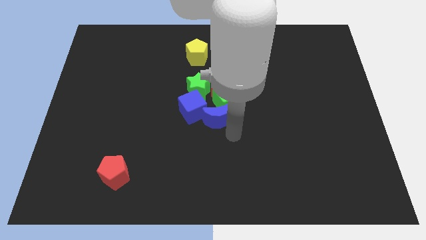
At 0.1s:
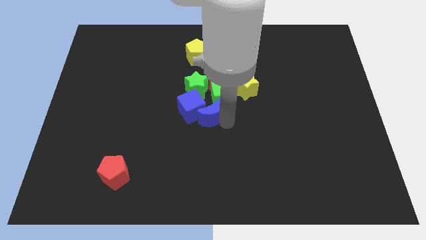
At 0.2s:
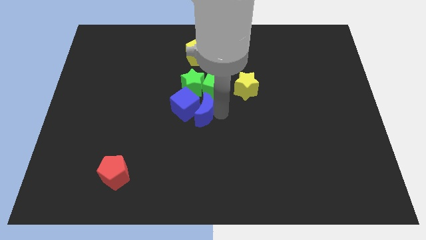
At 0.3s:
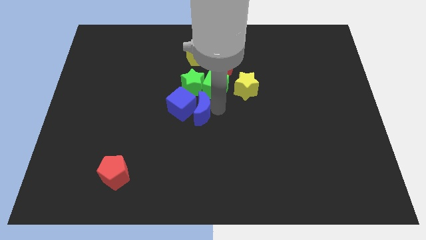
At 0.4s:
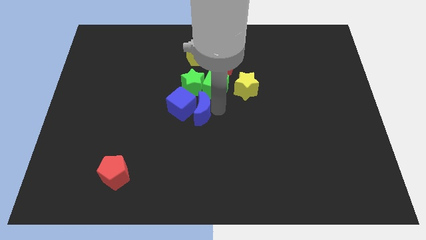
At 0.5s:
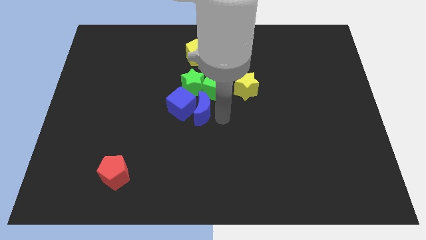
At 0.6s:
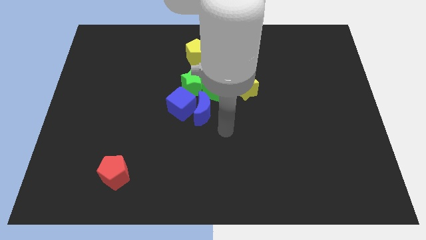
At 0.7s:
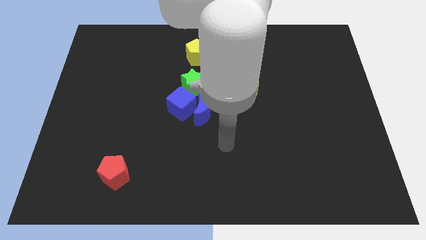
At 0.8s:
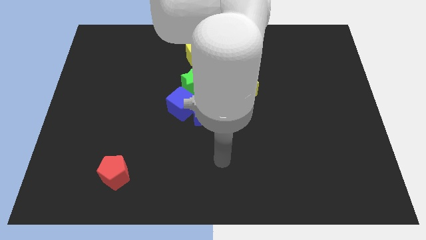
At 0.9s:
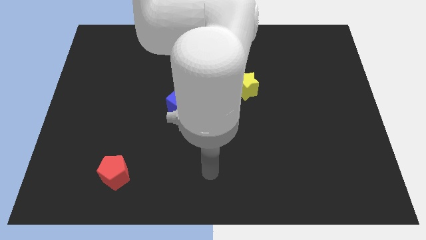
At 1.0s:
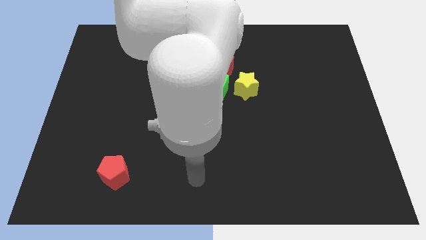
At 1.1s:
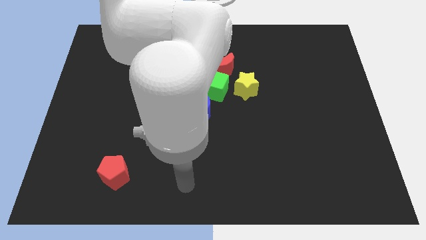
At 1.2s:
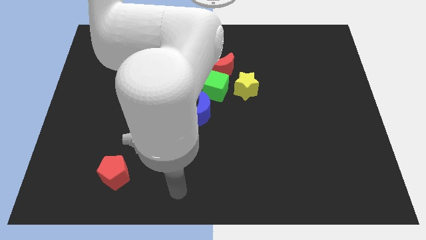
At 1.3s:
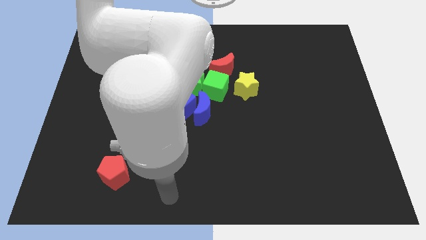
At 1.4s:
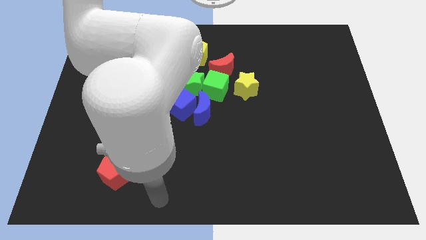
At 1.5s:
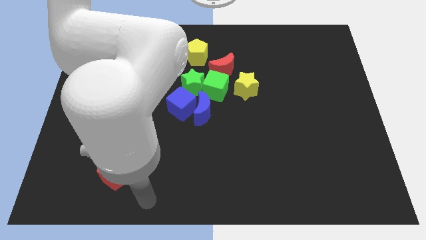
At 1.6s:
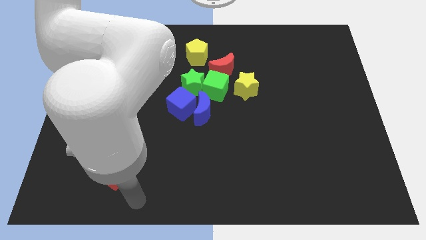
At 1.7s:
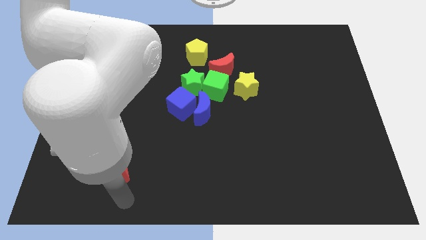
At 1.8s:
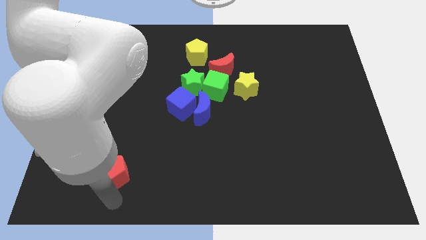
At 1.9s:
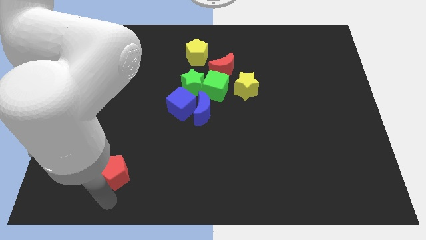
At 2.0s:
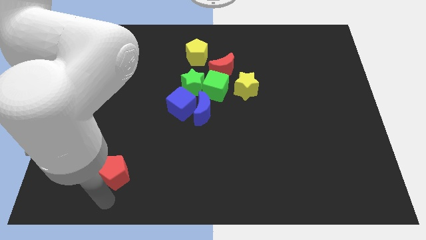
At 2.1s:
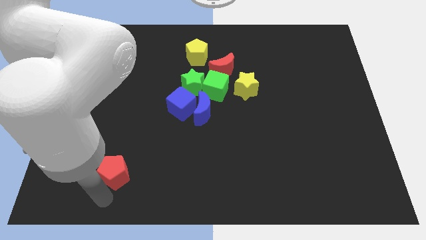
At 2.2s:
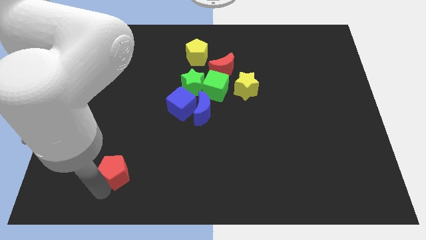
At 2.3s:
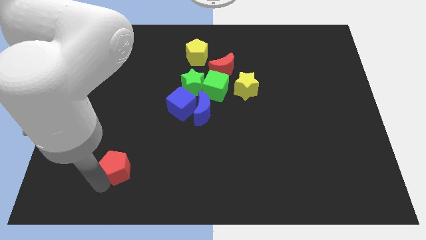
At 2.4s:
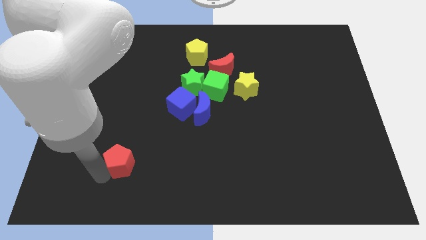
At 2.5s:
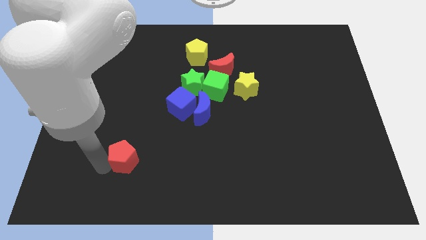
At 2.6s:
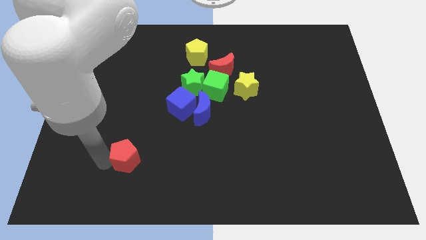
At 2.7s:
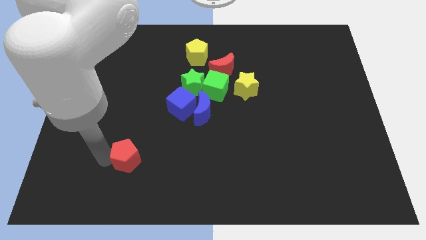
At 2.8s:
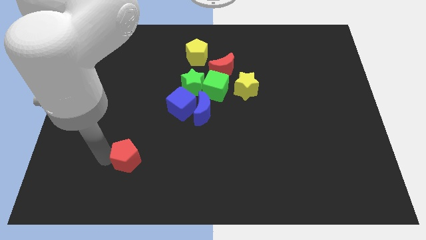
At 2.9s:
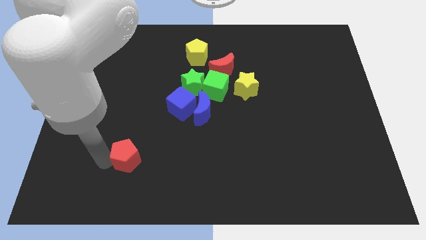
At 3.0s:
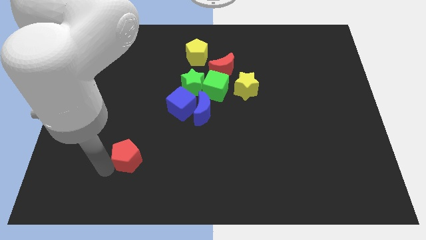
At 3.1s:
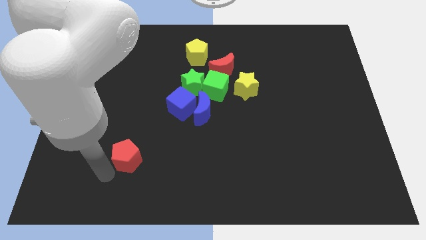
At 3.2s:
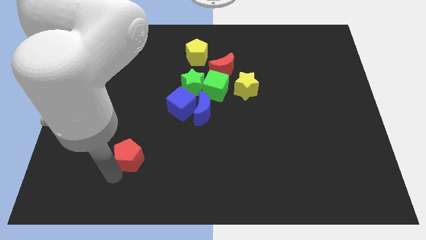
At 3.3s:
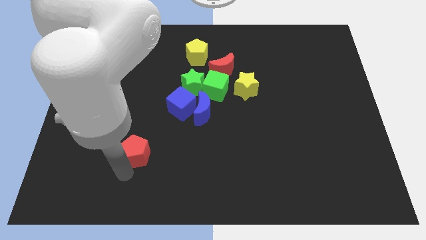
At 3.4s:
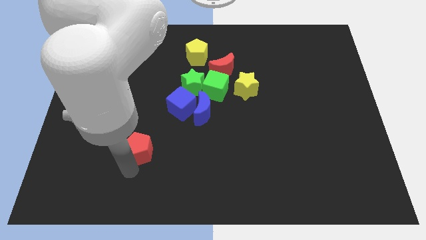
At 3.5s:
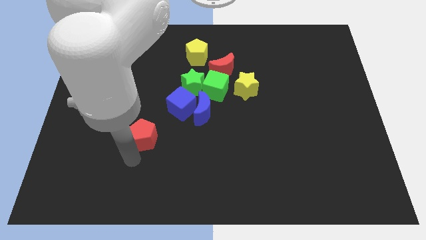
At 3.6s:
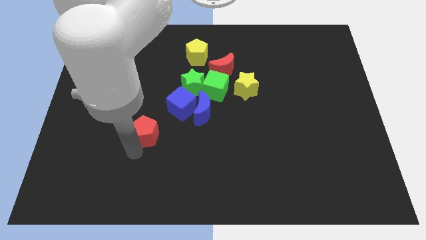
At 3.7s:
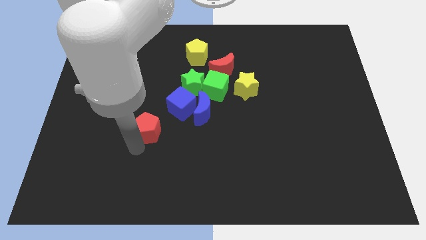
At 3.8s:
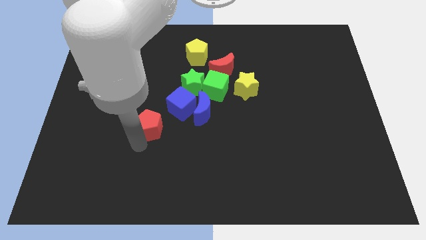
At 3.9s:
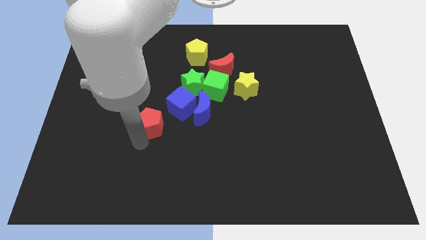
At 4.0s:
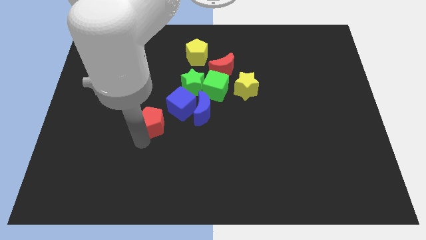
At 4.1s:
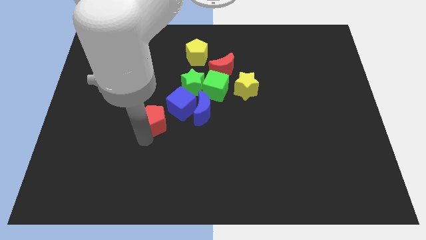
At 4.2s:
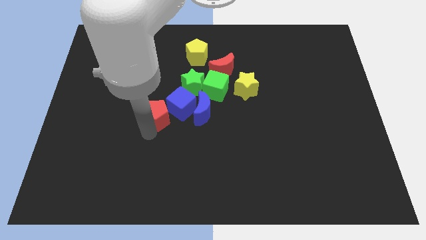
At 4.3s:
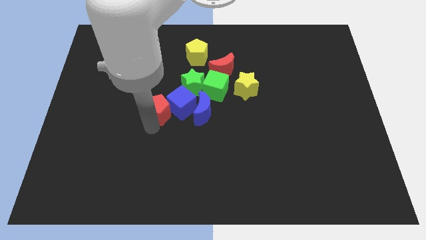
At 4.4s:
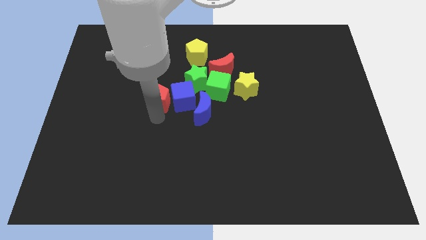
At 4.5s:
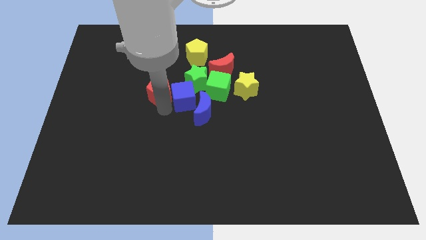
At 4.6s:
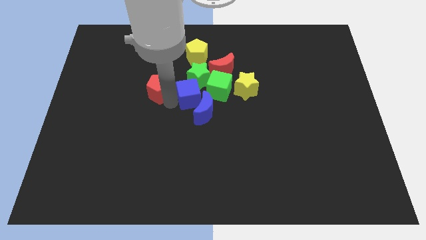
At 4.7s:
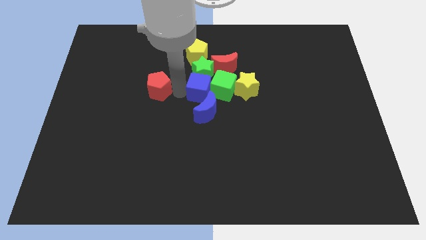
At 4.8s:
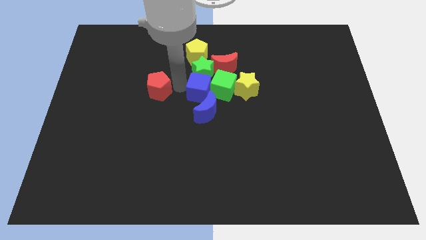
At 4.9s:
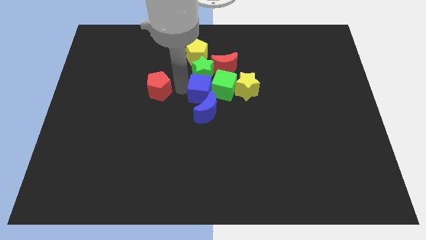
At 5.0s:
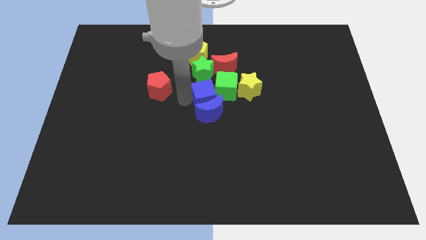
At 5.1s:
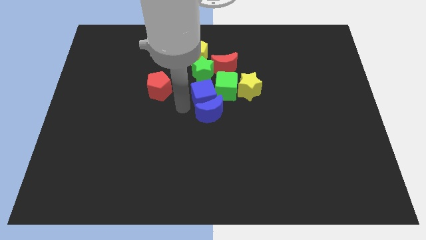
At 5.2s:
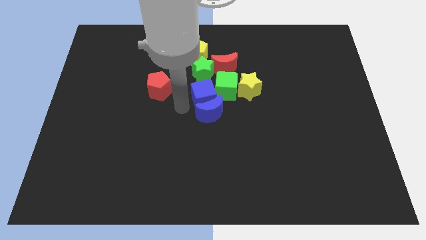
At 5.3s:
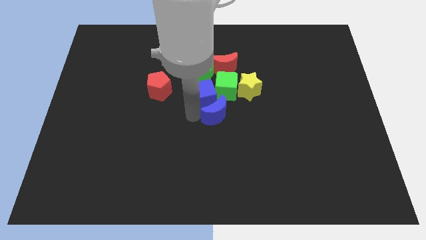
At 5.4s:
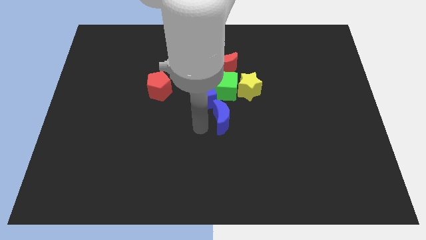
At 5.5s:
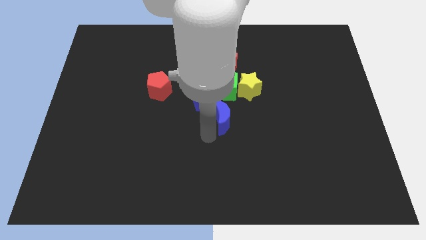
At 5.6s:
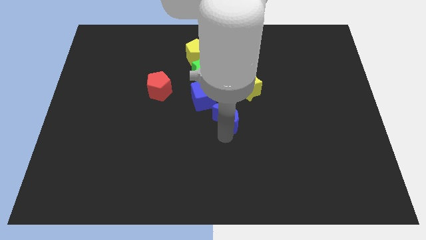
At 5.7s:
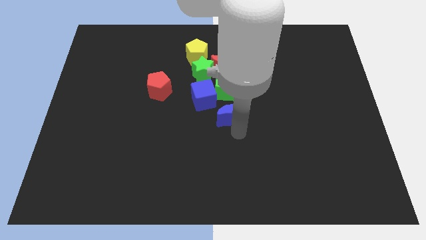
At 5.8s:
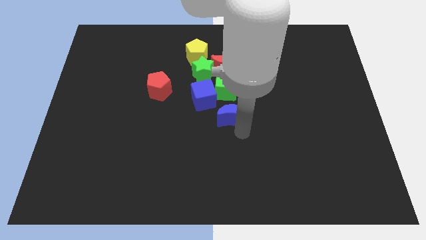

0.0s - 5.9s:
move the red pentagon towards up

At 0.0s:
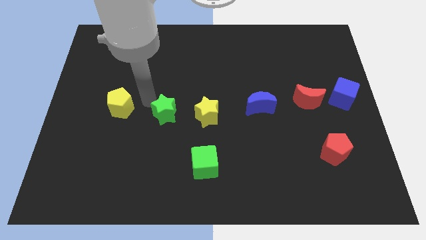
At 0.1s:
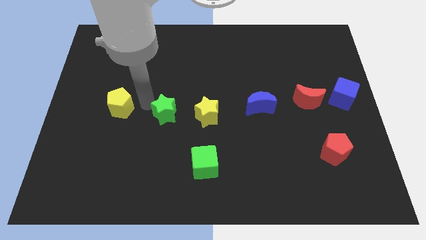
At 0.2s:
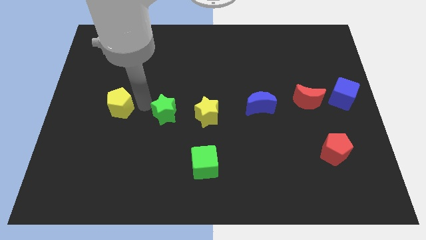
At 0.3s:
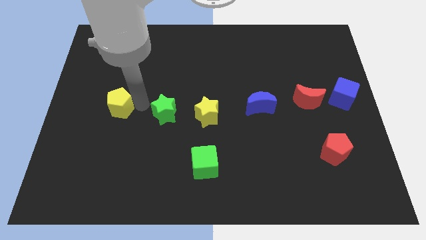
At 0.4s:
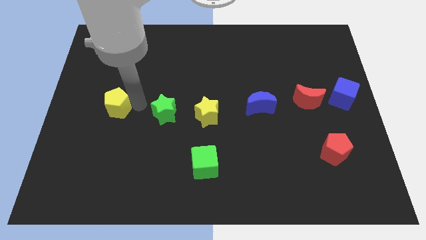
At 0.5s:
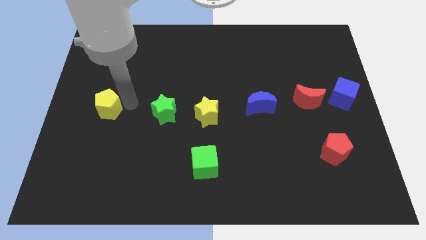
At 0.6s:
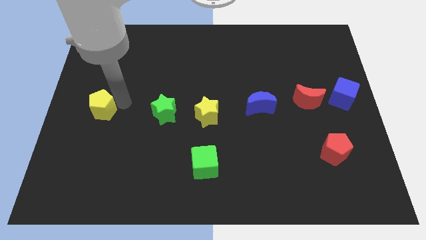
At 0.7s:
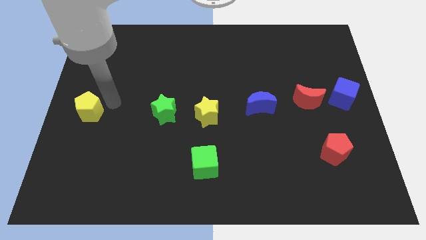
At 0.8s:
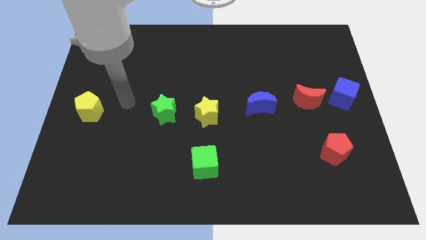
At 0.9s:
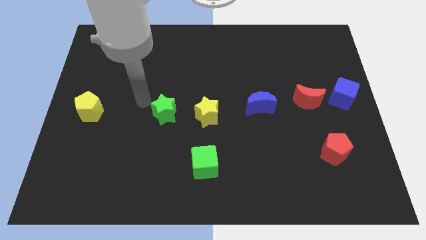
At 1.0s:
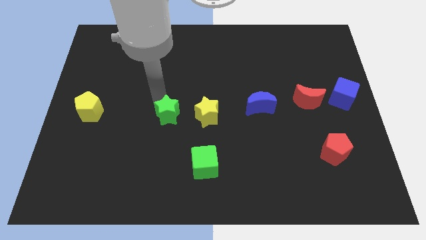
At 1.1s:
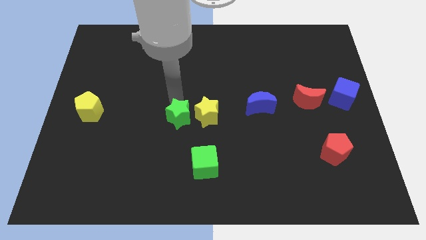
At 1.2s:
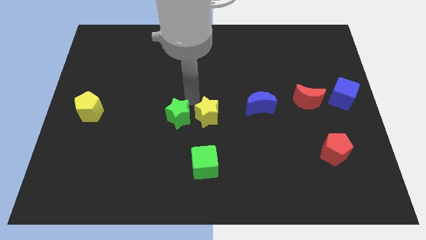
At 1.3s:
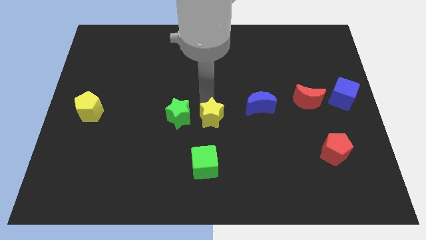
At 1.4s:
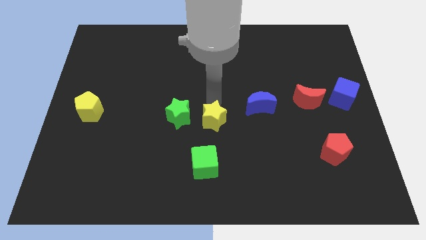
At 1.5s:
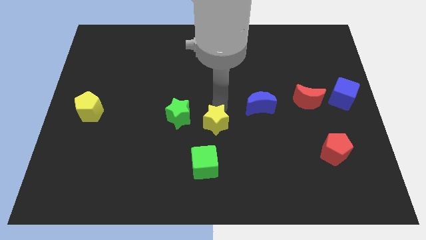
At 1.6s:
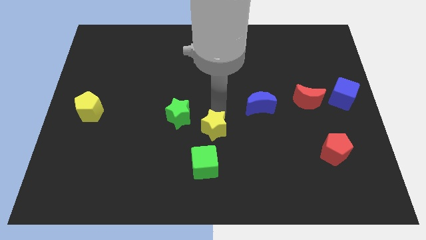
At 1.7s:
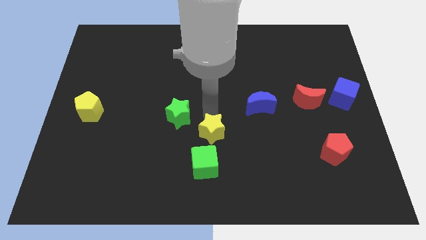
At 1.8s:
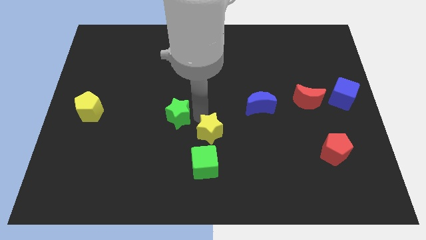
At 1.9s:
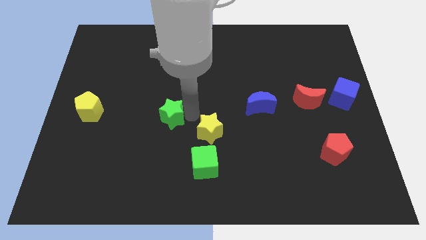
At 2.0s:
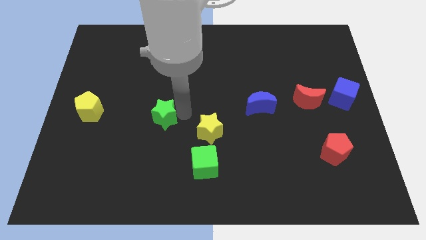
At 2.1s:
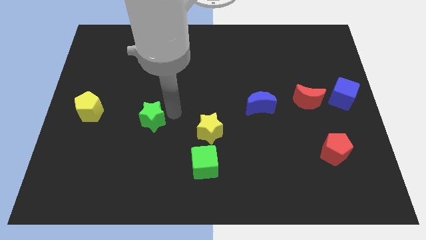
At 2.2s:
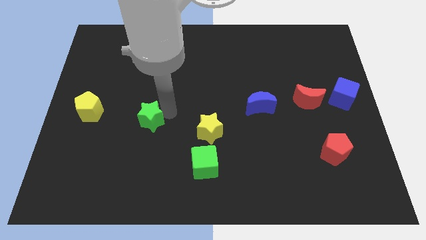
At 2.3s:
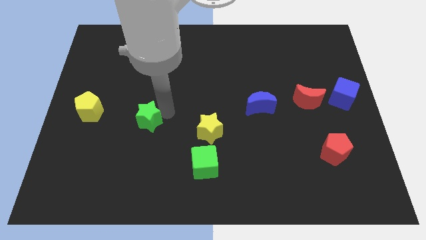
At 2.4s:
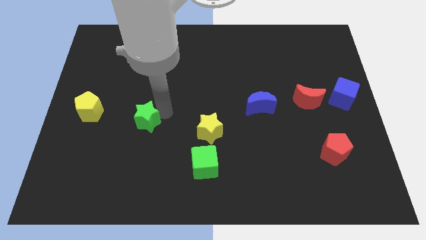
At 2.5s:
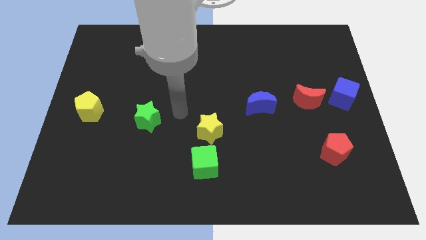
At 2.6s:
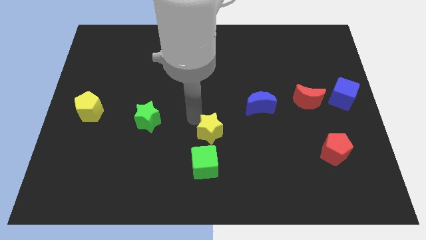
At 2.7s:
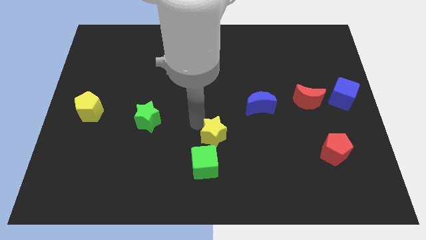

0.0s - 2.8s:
push yellow star towards green cube

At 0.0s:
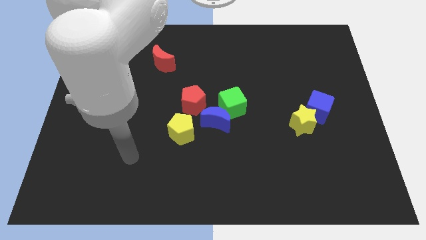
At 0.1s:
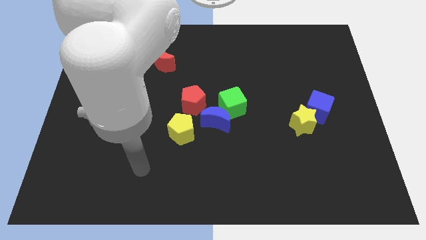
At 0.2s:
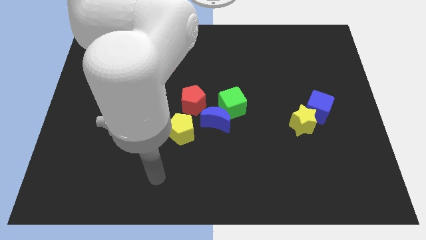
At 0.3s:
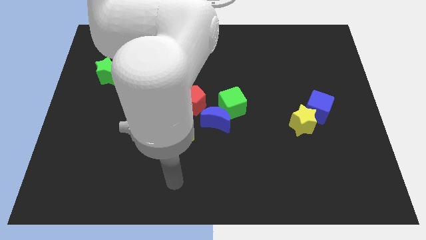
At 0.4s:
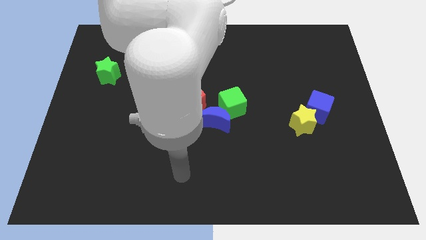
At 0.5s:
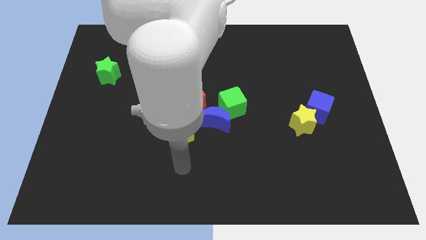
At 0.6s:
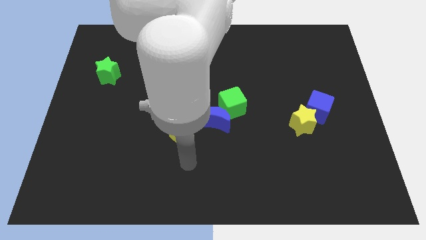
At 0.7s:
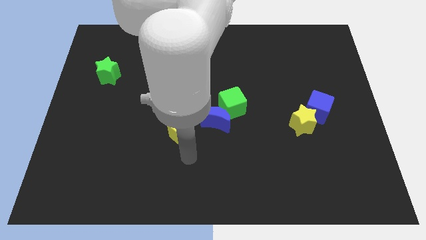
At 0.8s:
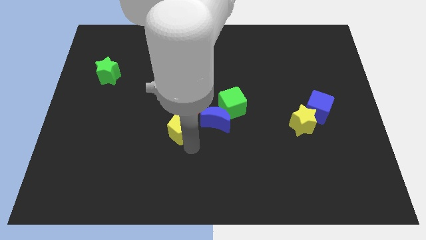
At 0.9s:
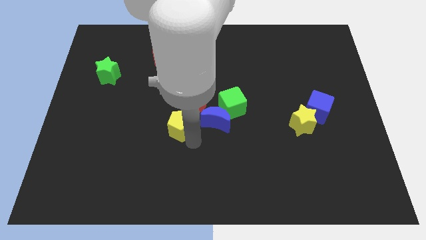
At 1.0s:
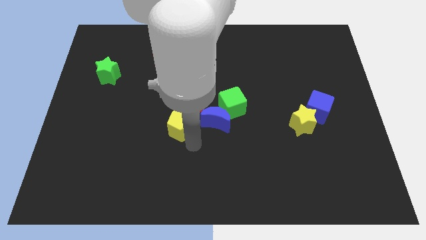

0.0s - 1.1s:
move the arm towards the yellow pentagon
